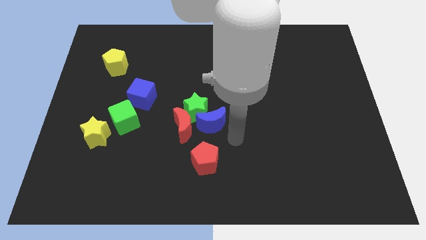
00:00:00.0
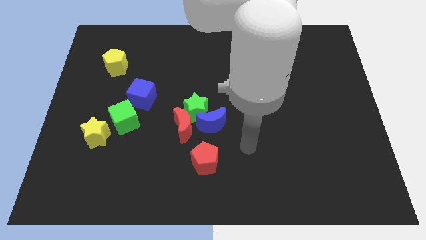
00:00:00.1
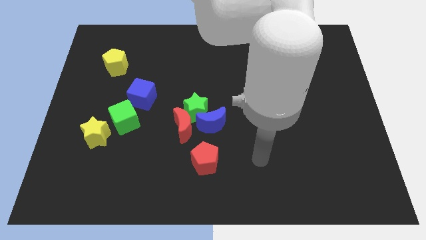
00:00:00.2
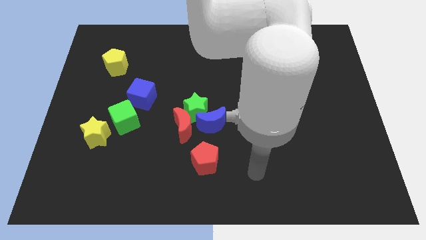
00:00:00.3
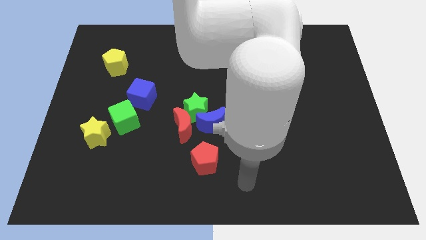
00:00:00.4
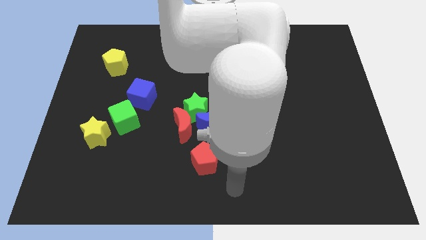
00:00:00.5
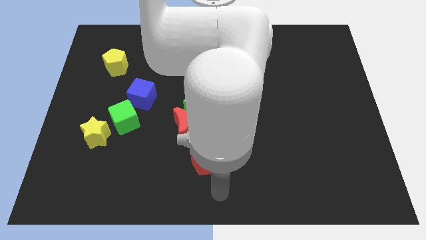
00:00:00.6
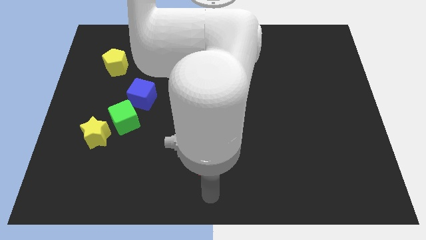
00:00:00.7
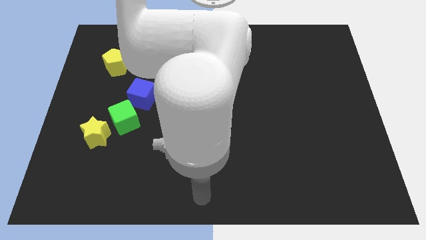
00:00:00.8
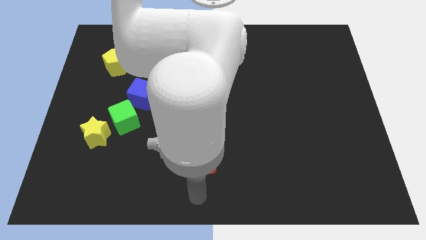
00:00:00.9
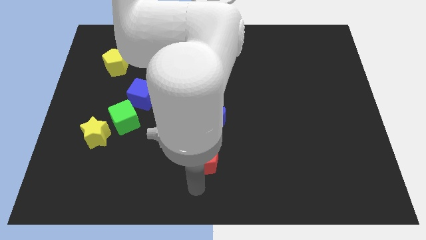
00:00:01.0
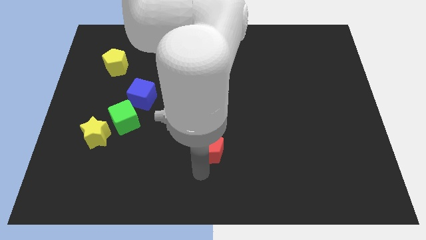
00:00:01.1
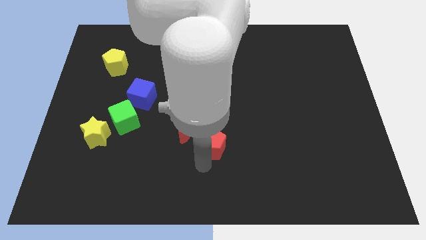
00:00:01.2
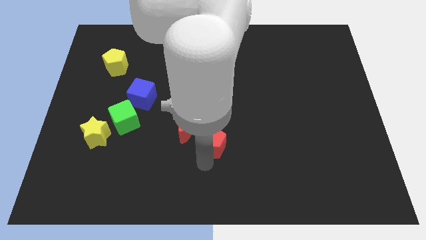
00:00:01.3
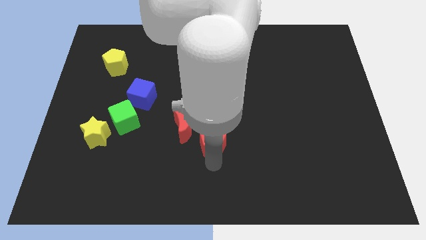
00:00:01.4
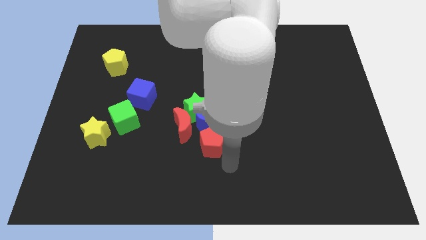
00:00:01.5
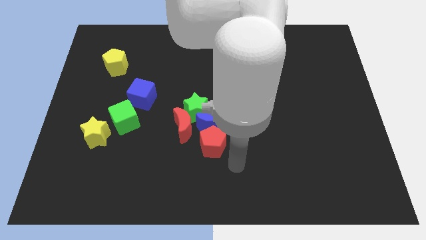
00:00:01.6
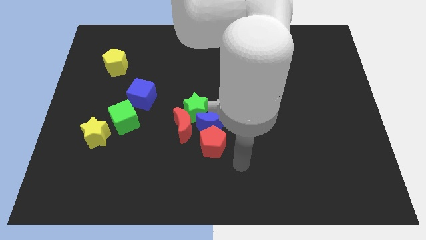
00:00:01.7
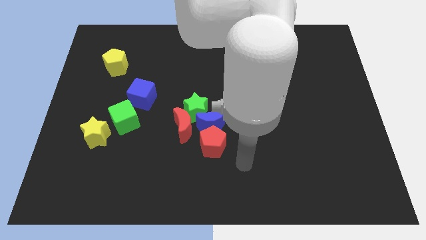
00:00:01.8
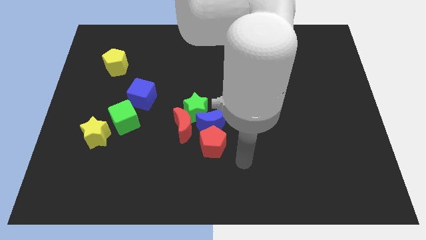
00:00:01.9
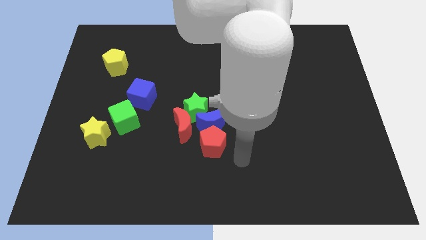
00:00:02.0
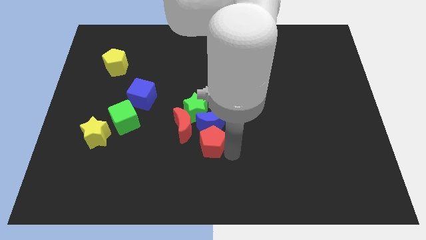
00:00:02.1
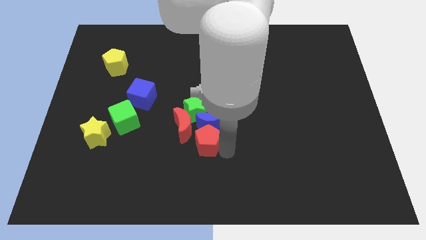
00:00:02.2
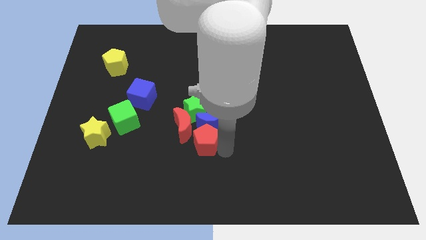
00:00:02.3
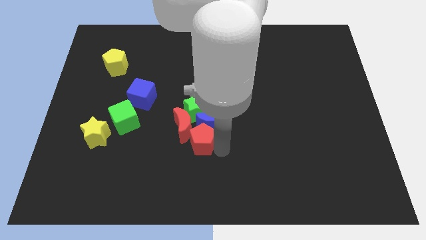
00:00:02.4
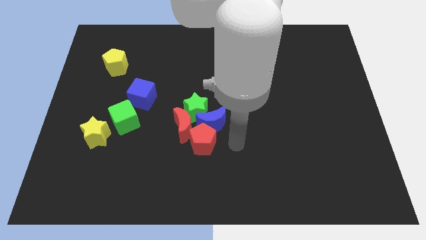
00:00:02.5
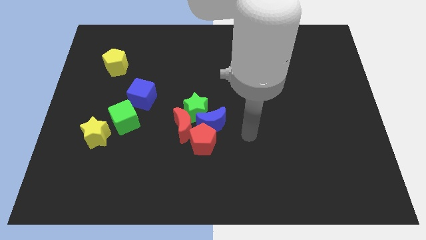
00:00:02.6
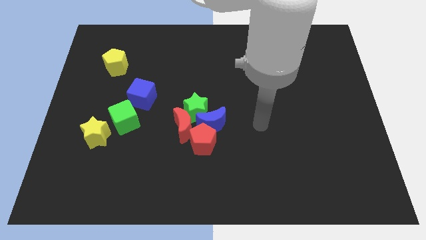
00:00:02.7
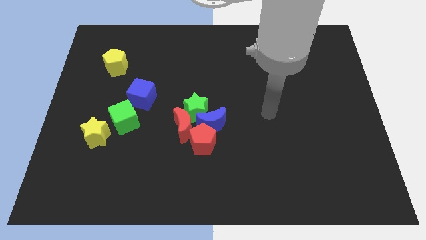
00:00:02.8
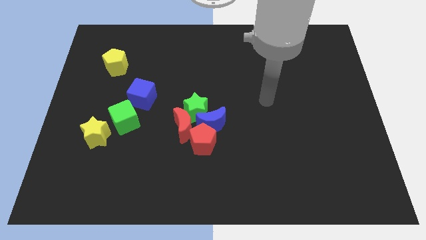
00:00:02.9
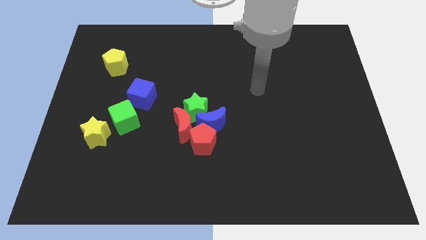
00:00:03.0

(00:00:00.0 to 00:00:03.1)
drag the red pentagon to the bottom side of the blue moon

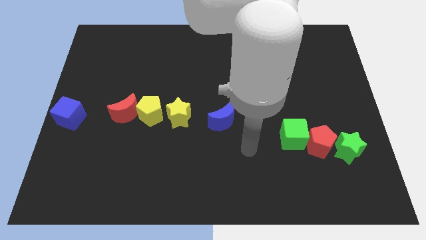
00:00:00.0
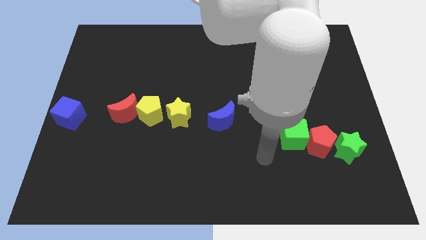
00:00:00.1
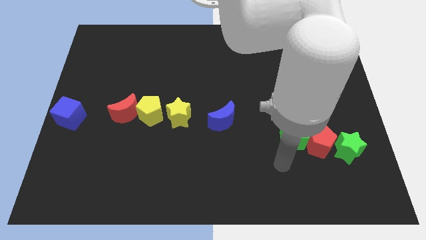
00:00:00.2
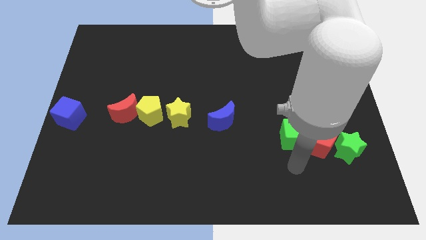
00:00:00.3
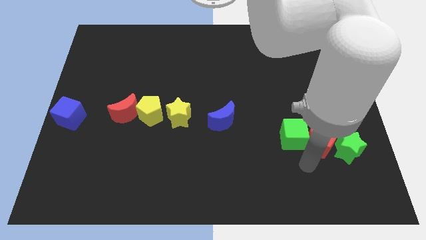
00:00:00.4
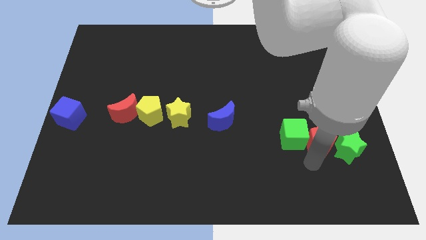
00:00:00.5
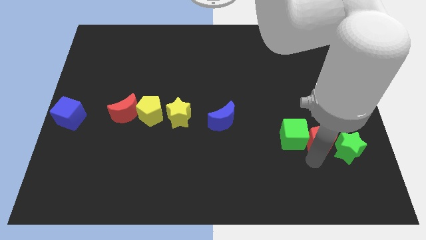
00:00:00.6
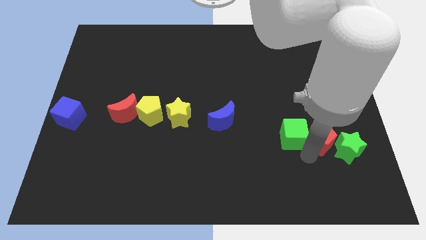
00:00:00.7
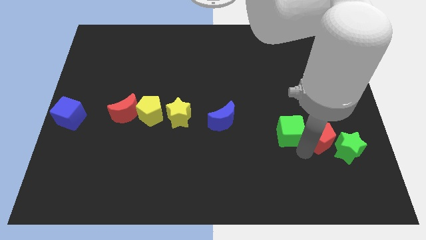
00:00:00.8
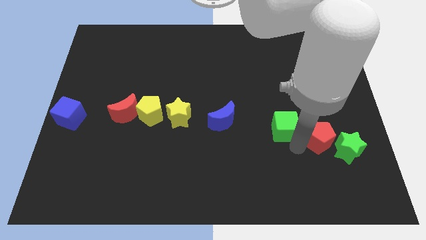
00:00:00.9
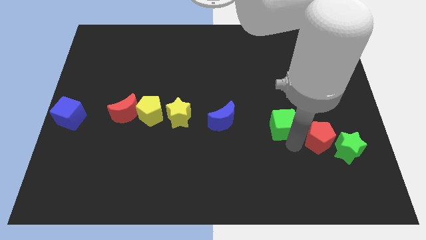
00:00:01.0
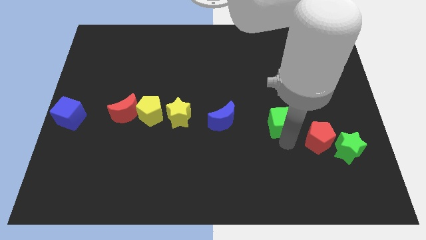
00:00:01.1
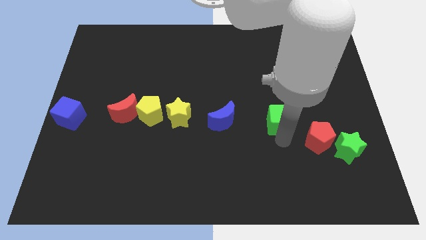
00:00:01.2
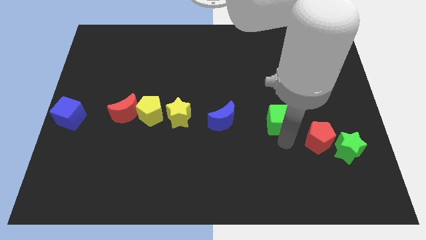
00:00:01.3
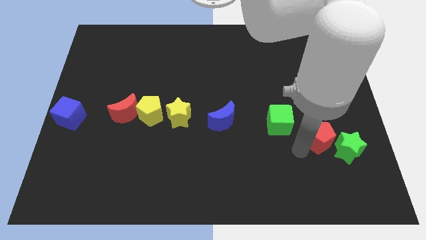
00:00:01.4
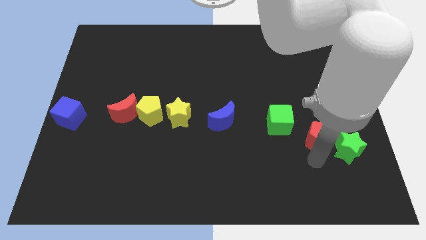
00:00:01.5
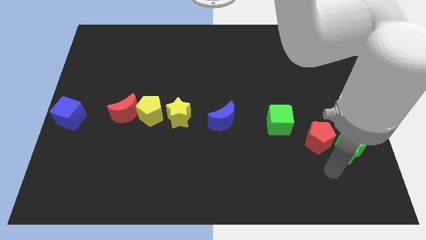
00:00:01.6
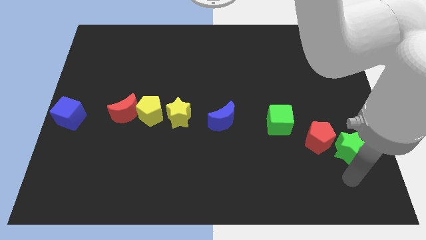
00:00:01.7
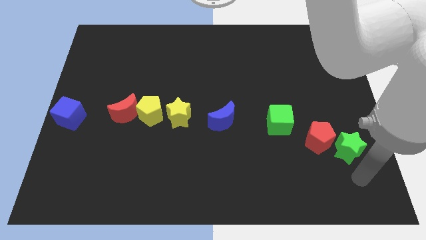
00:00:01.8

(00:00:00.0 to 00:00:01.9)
move the green cube from the red pentagon

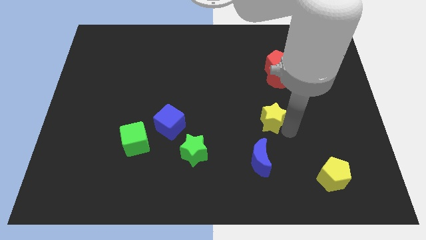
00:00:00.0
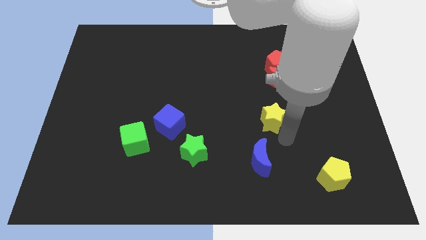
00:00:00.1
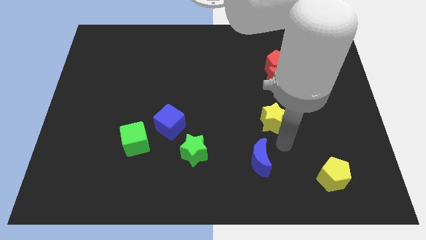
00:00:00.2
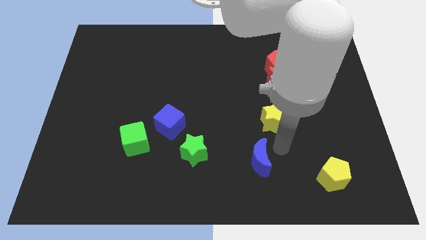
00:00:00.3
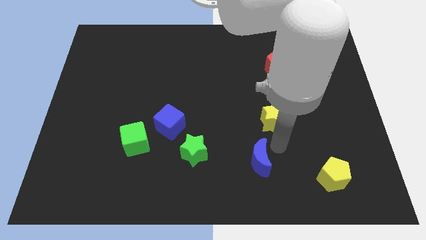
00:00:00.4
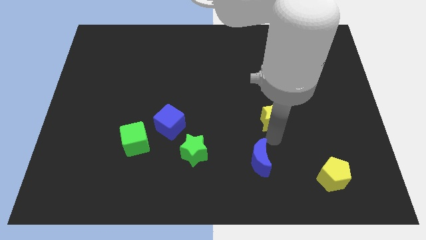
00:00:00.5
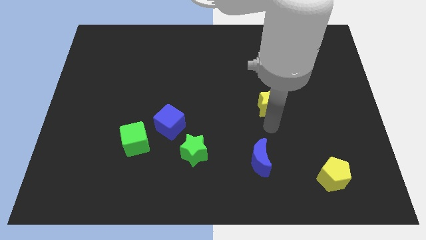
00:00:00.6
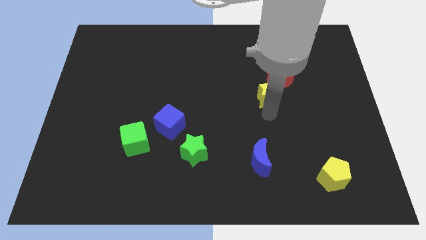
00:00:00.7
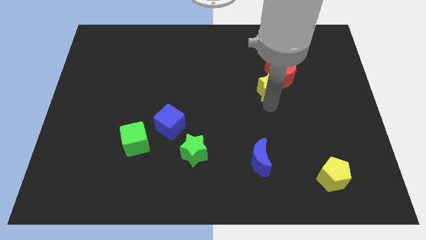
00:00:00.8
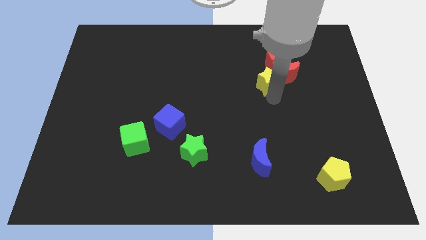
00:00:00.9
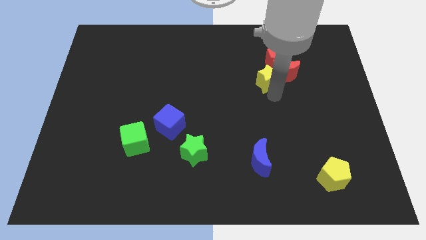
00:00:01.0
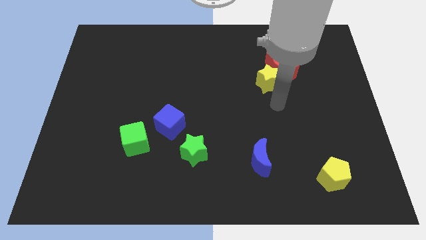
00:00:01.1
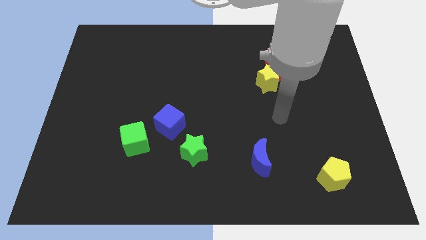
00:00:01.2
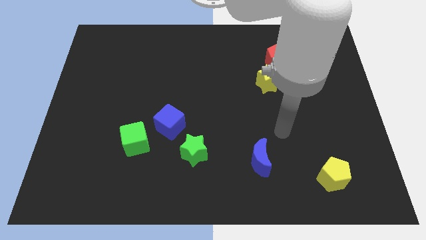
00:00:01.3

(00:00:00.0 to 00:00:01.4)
push the yellow star into the red blocks

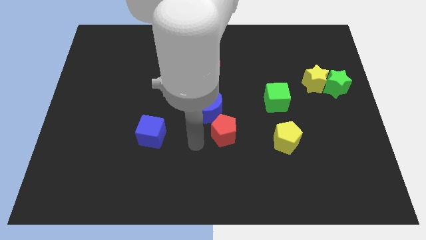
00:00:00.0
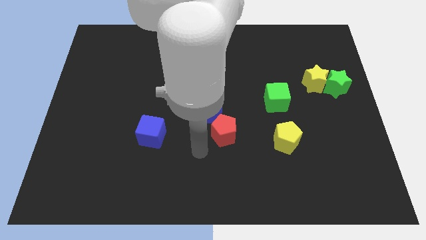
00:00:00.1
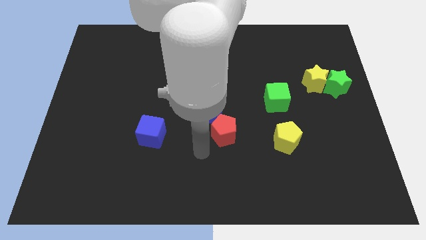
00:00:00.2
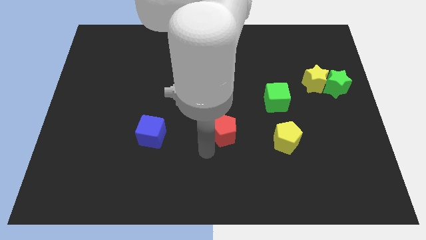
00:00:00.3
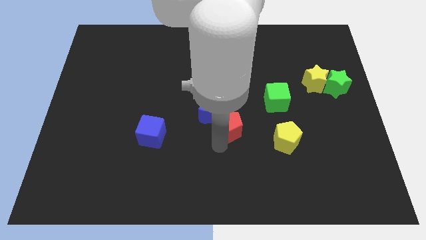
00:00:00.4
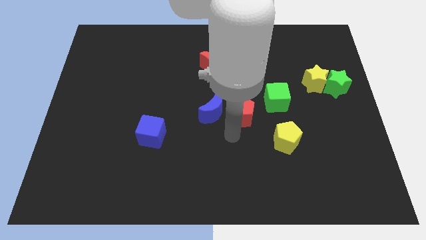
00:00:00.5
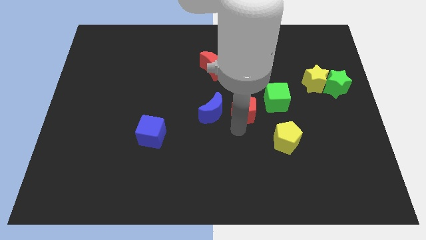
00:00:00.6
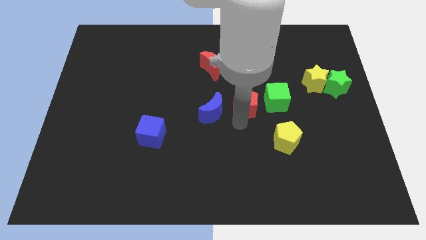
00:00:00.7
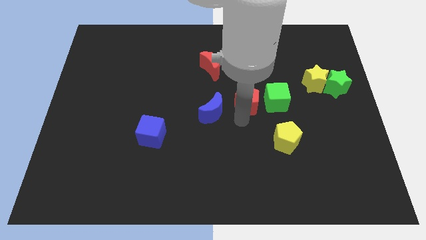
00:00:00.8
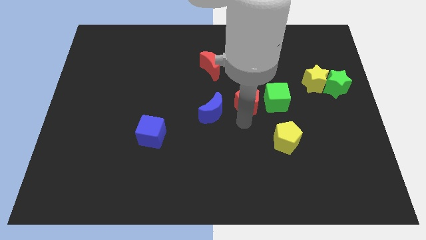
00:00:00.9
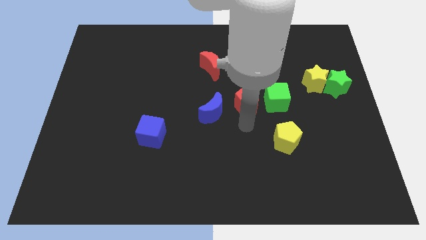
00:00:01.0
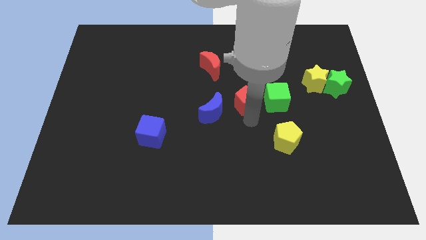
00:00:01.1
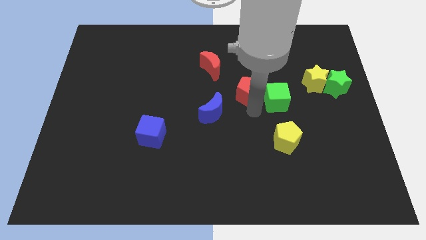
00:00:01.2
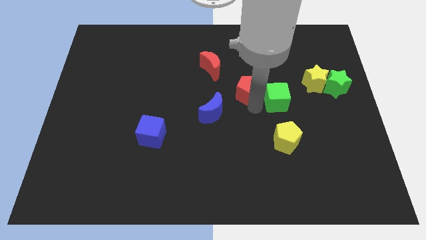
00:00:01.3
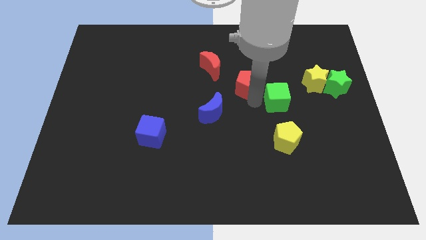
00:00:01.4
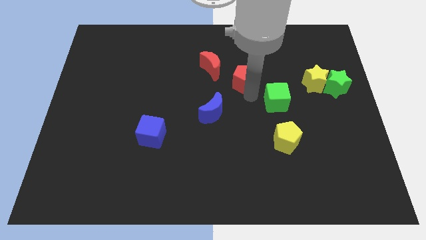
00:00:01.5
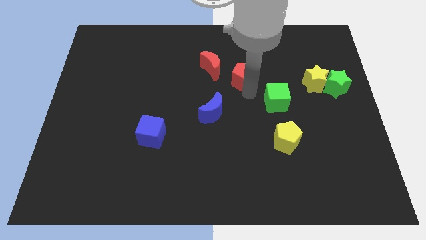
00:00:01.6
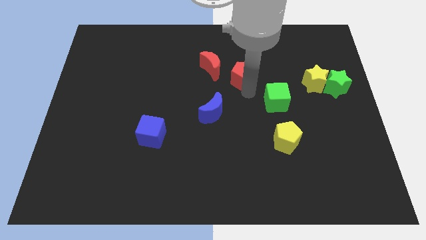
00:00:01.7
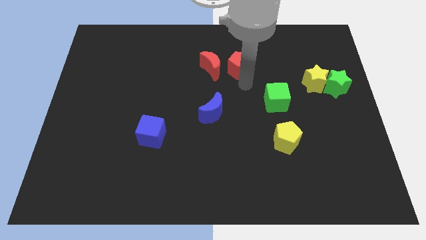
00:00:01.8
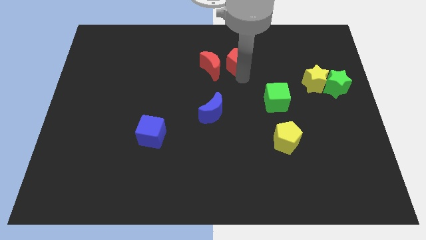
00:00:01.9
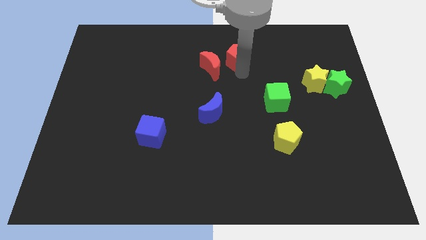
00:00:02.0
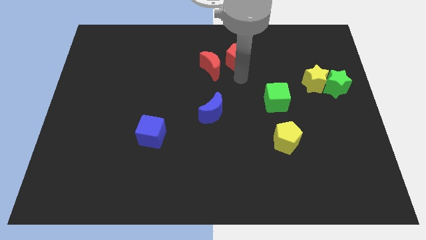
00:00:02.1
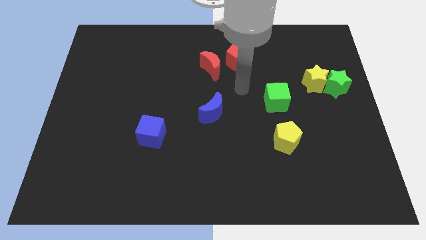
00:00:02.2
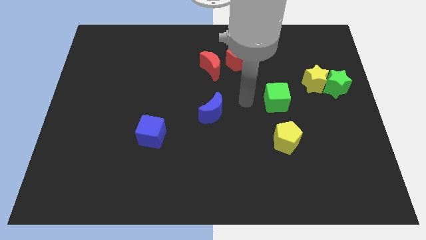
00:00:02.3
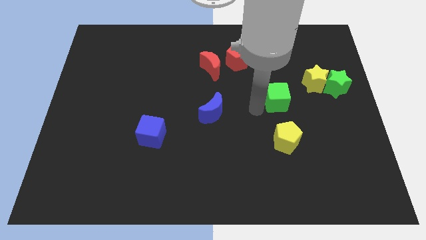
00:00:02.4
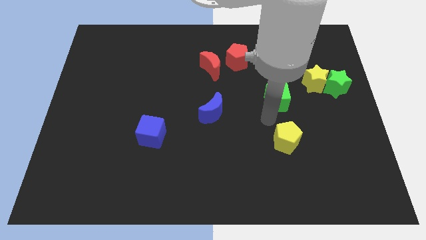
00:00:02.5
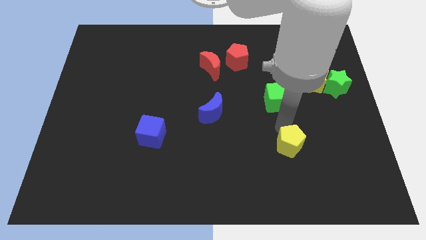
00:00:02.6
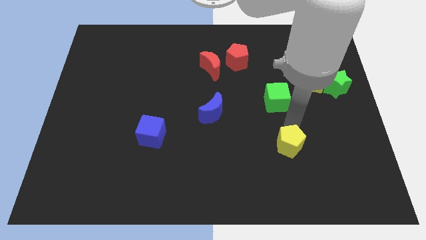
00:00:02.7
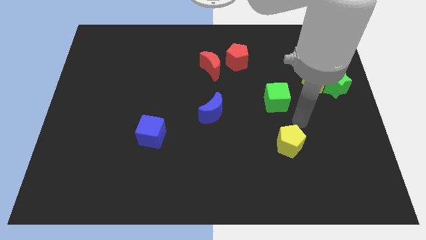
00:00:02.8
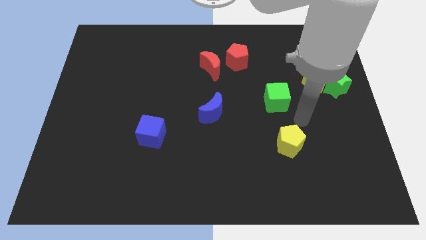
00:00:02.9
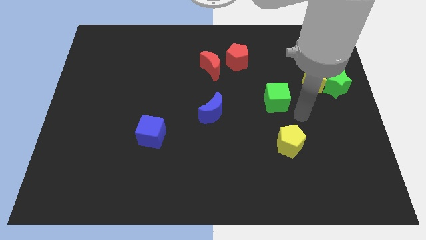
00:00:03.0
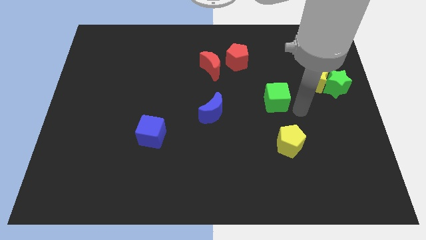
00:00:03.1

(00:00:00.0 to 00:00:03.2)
put red pentagon parallel right to the red moon
